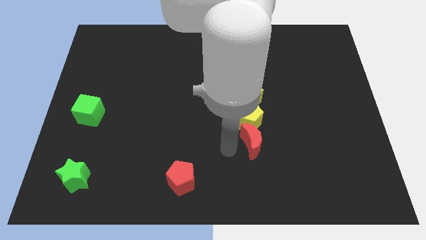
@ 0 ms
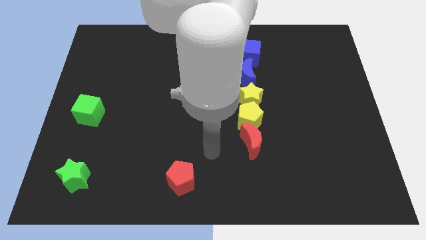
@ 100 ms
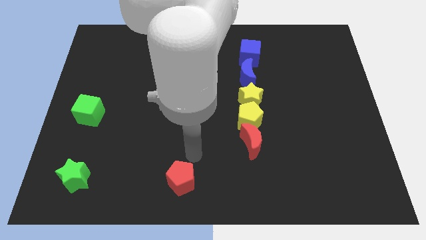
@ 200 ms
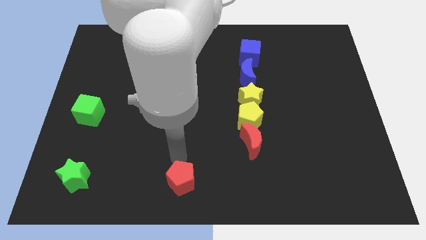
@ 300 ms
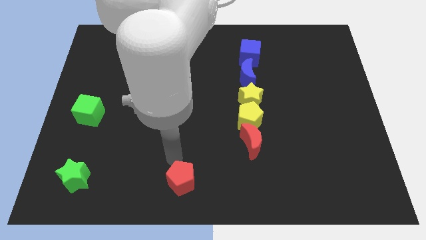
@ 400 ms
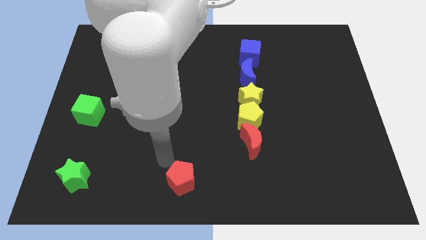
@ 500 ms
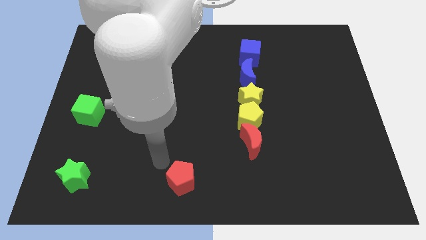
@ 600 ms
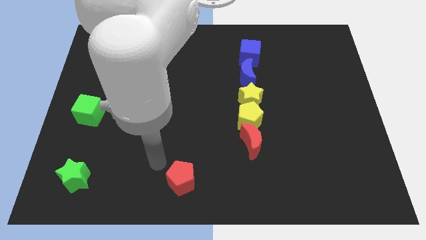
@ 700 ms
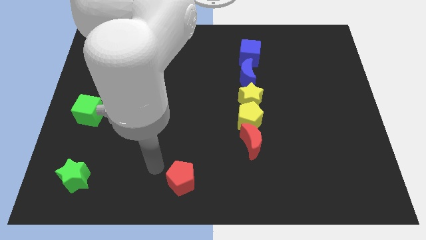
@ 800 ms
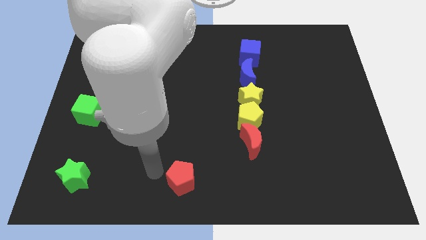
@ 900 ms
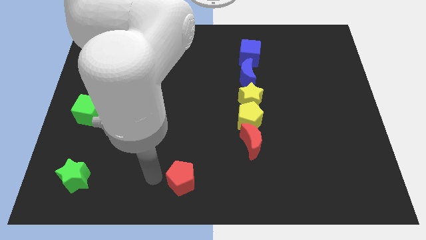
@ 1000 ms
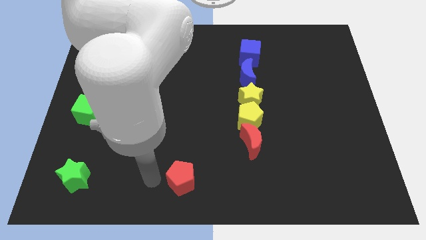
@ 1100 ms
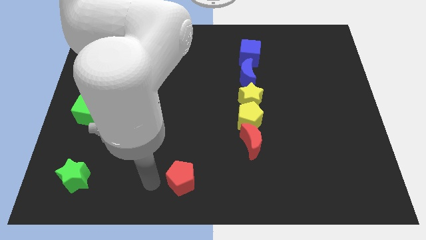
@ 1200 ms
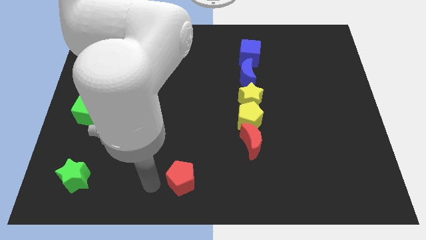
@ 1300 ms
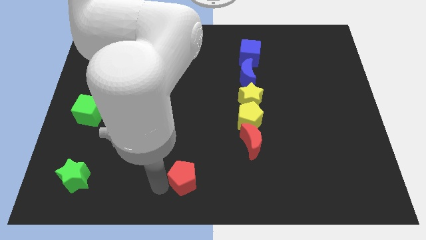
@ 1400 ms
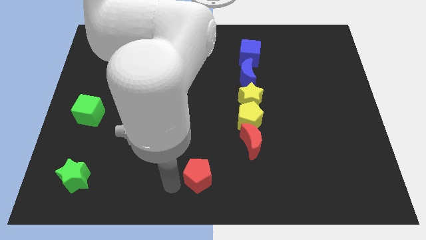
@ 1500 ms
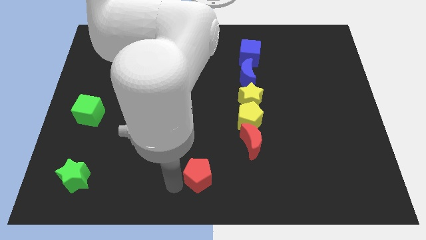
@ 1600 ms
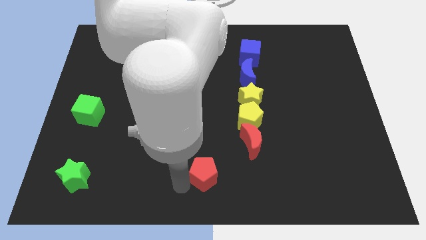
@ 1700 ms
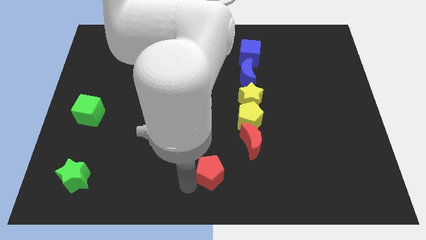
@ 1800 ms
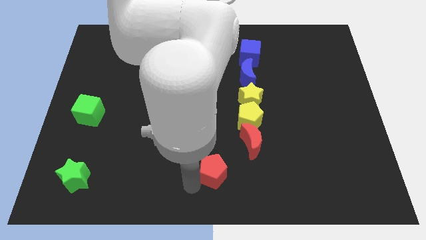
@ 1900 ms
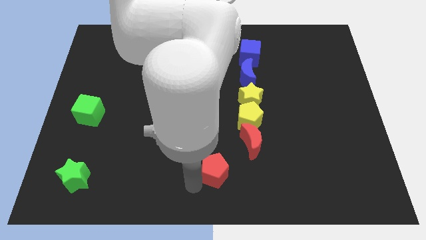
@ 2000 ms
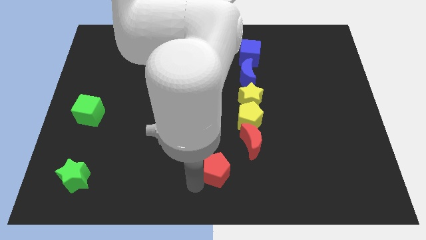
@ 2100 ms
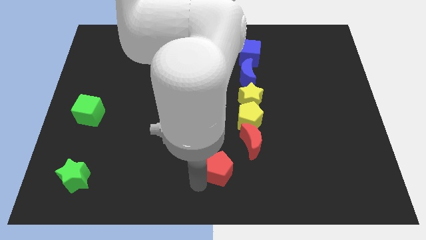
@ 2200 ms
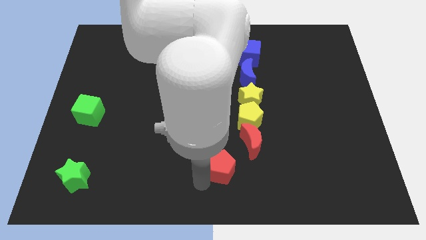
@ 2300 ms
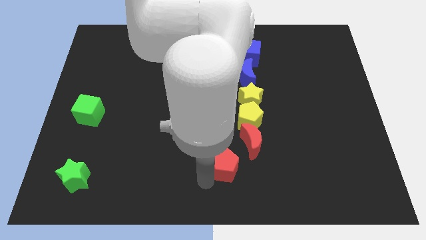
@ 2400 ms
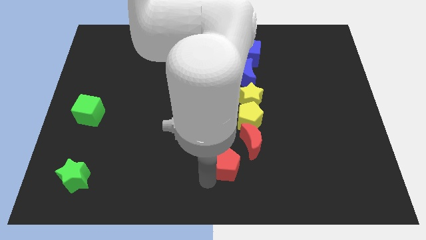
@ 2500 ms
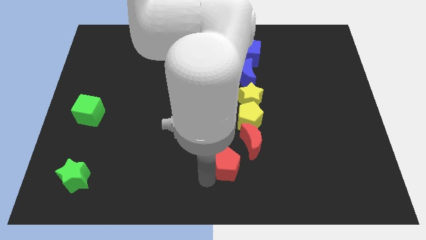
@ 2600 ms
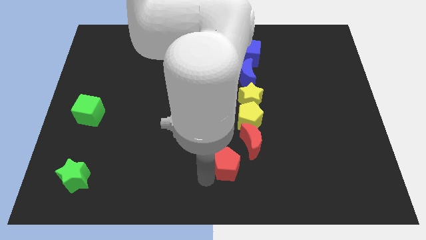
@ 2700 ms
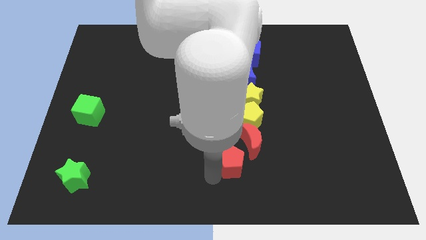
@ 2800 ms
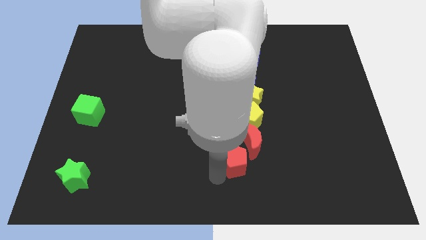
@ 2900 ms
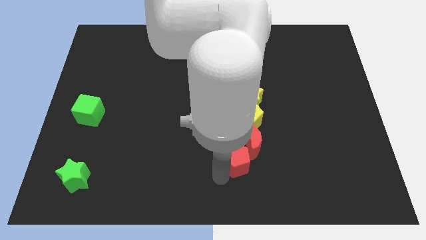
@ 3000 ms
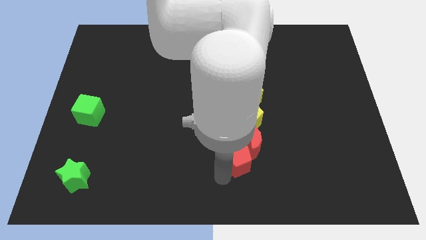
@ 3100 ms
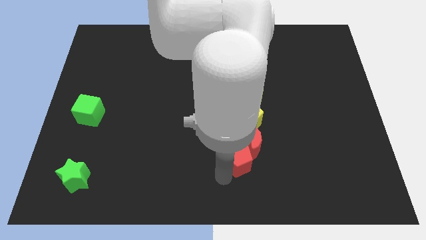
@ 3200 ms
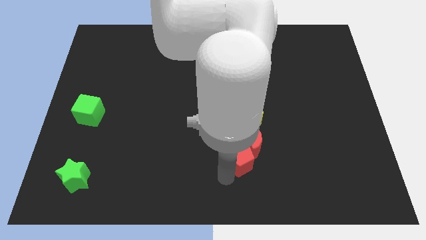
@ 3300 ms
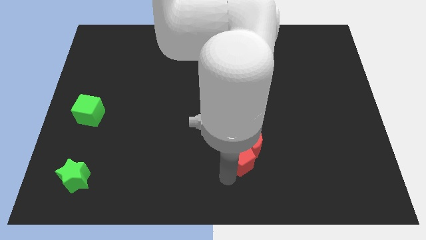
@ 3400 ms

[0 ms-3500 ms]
drag the red pentagon into the bottom side of the red crescent

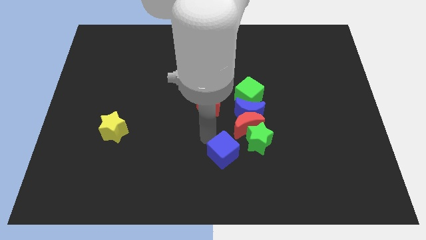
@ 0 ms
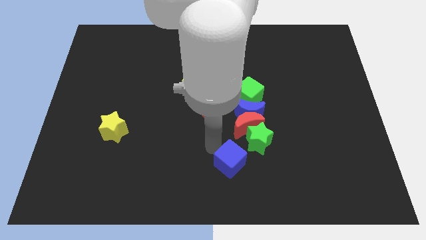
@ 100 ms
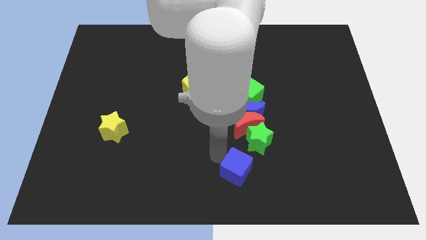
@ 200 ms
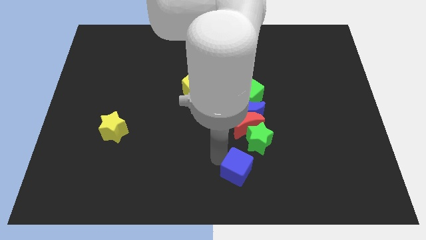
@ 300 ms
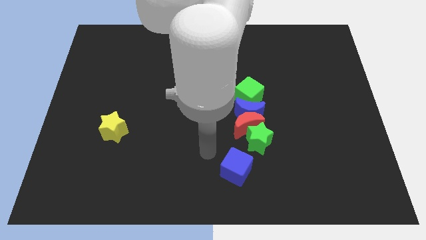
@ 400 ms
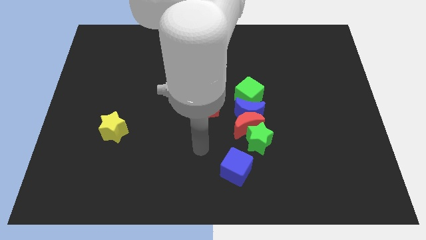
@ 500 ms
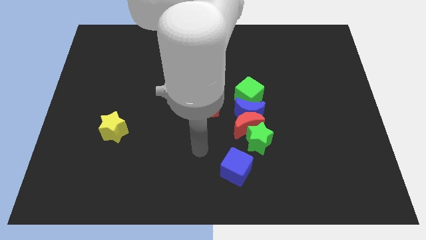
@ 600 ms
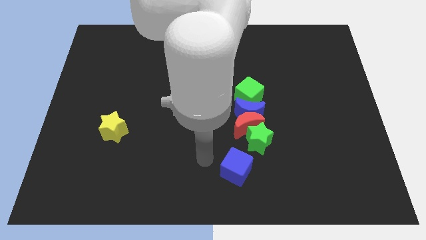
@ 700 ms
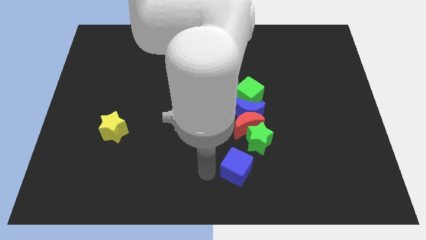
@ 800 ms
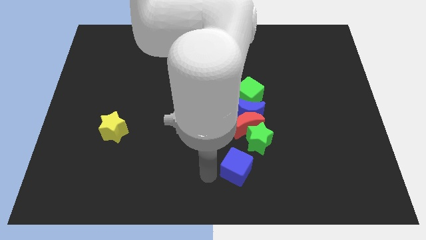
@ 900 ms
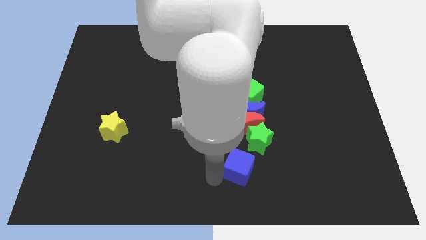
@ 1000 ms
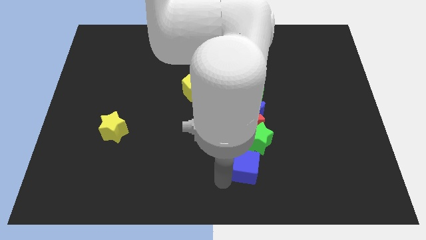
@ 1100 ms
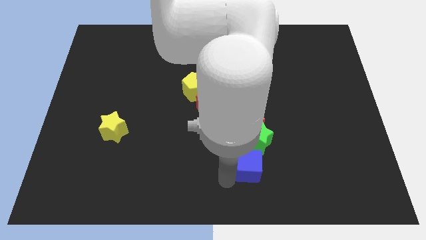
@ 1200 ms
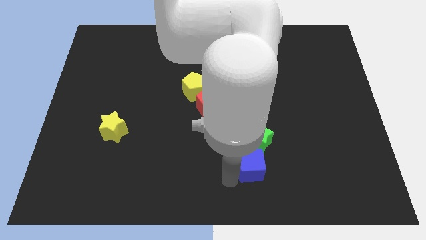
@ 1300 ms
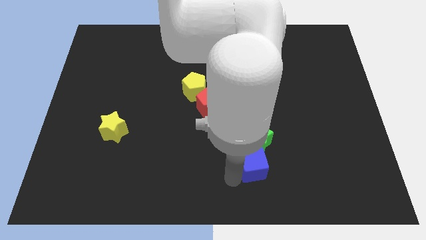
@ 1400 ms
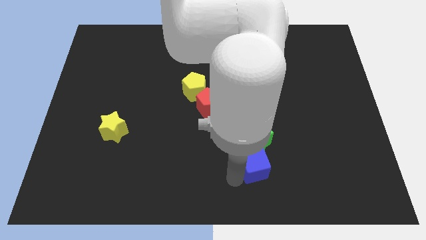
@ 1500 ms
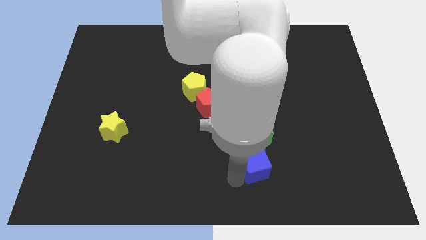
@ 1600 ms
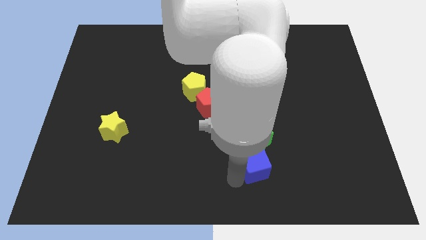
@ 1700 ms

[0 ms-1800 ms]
move the blue cube to the bottom of the green star

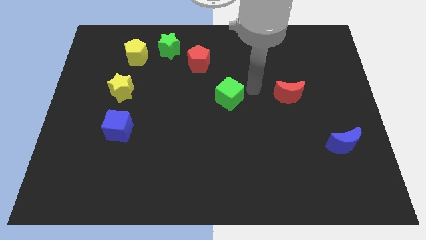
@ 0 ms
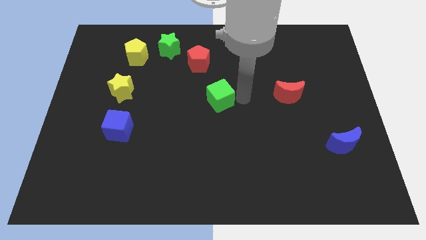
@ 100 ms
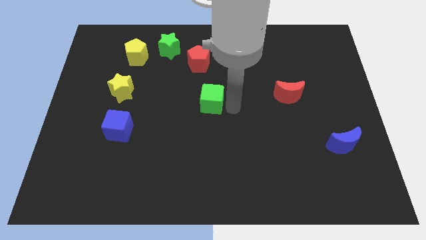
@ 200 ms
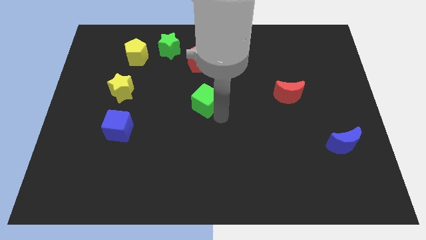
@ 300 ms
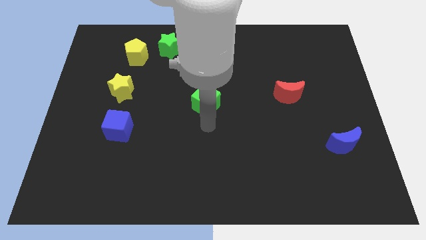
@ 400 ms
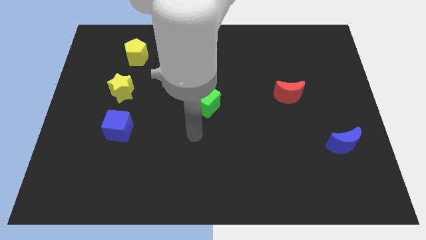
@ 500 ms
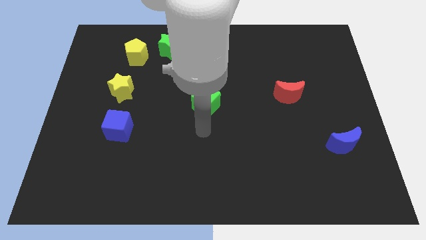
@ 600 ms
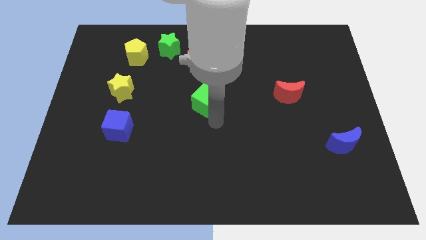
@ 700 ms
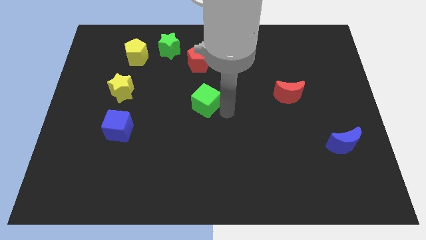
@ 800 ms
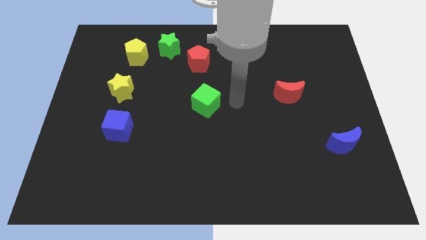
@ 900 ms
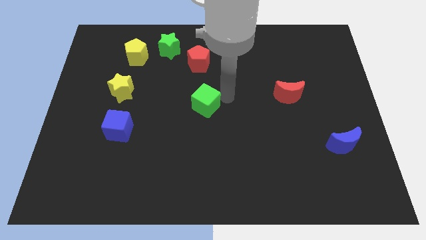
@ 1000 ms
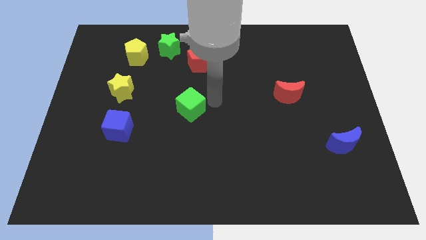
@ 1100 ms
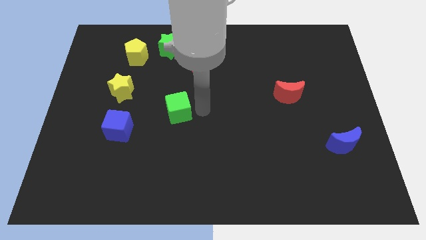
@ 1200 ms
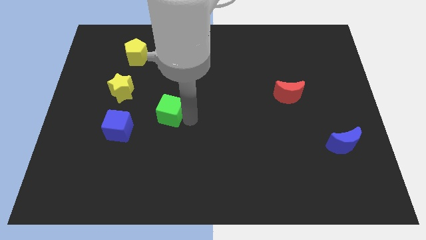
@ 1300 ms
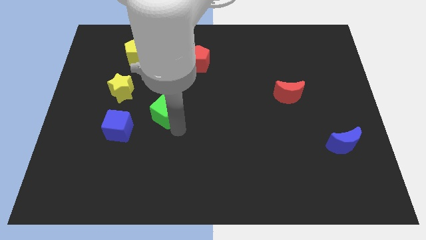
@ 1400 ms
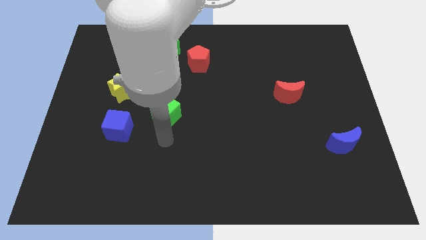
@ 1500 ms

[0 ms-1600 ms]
push the green cube diagnol bottom right to the yellow star

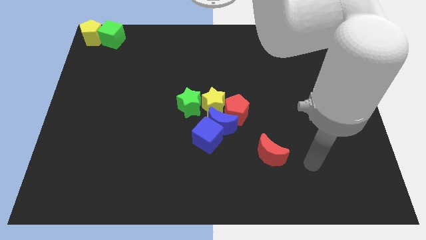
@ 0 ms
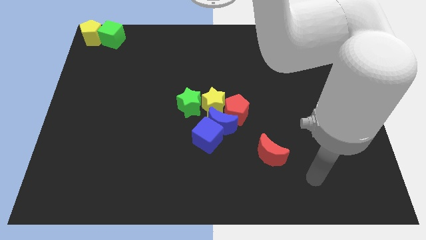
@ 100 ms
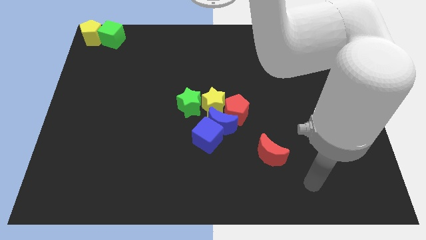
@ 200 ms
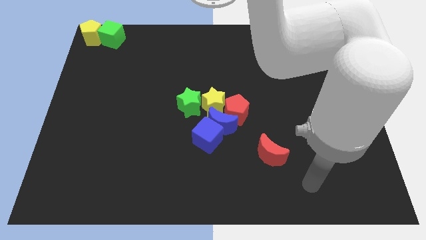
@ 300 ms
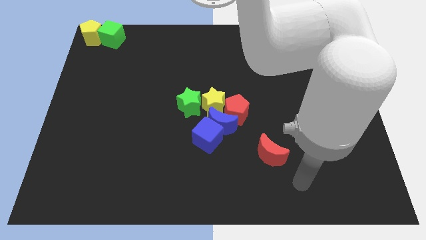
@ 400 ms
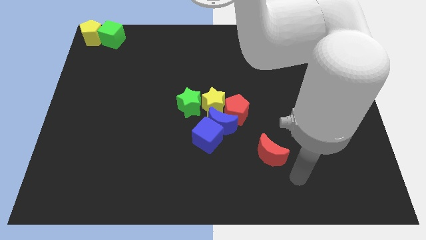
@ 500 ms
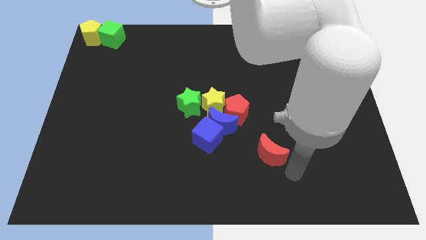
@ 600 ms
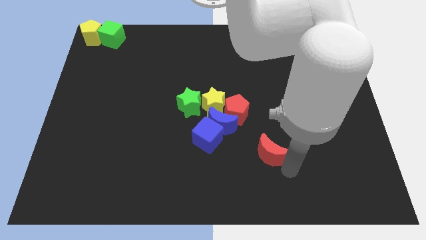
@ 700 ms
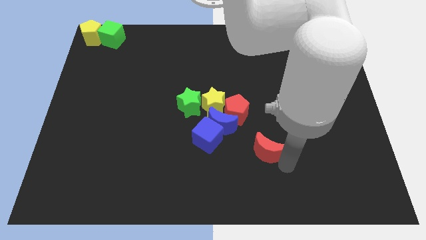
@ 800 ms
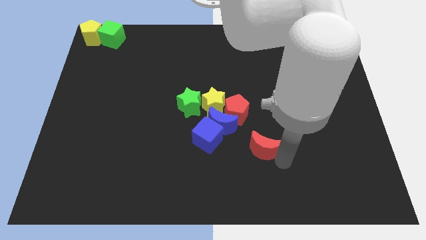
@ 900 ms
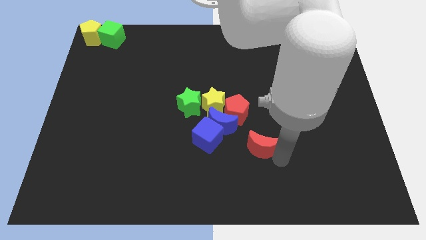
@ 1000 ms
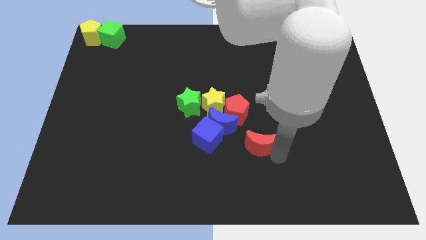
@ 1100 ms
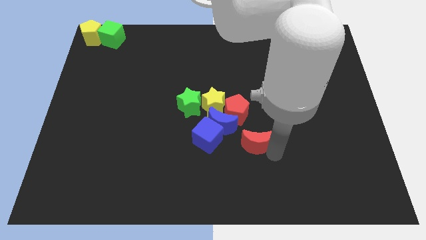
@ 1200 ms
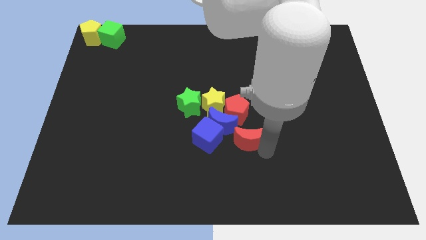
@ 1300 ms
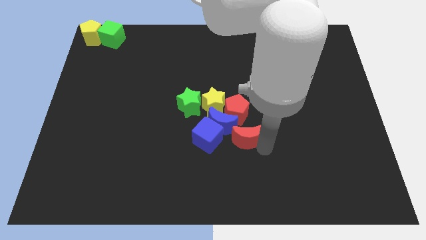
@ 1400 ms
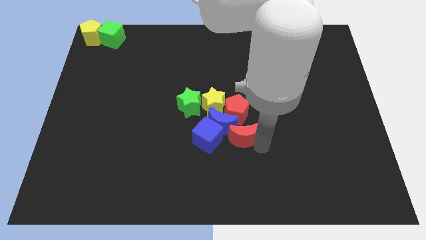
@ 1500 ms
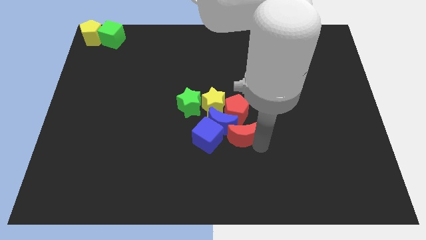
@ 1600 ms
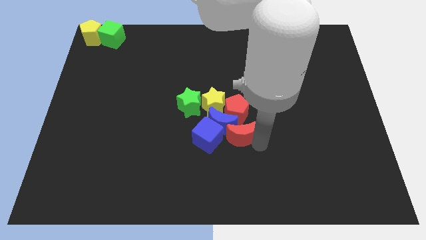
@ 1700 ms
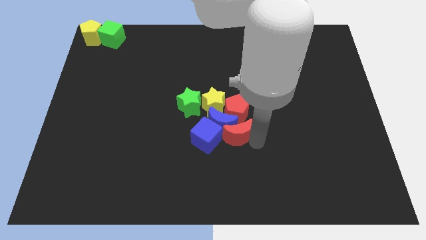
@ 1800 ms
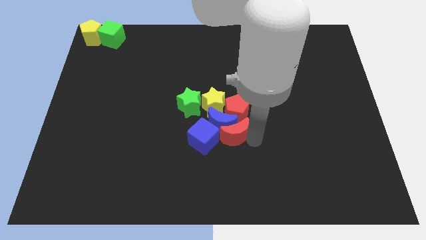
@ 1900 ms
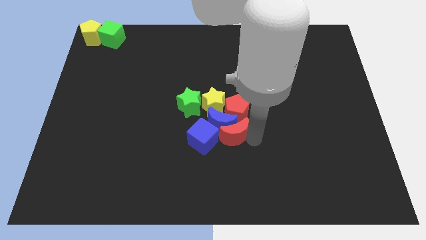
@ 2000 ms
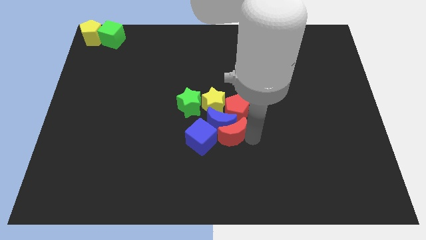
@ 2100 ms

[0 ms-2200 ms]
add red moon to the group of blocks
